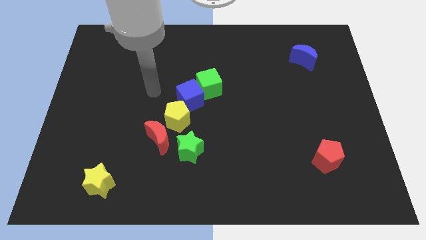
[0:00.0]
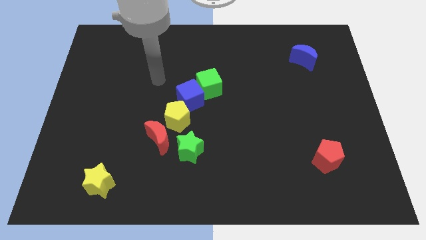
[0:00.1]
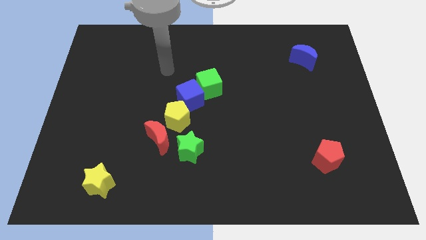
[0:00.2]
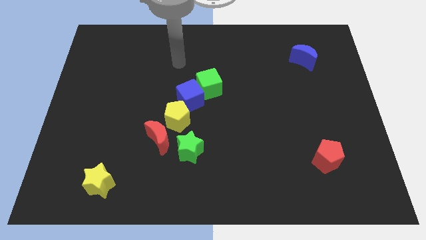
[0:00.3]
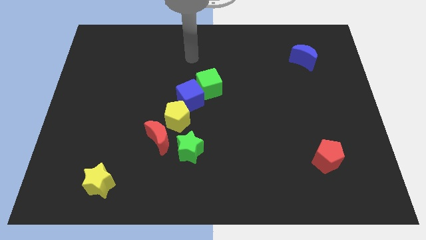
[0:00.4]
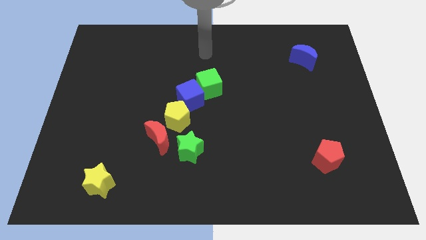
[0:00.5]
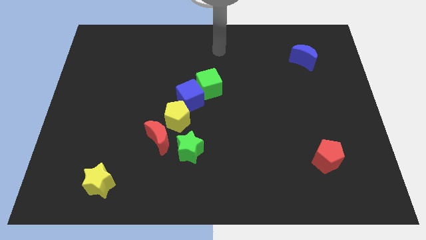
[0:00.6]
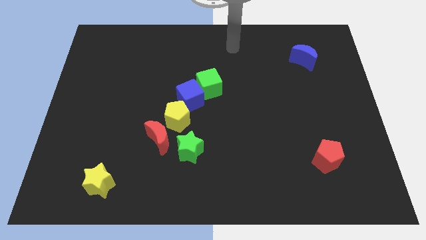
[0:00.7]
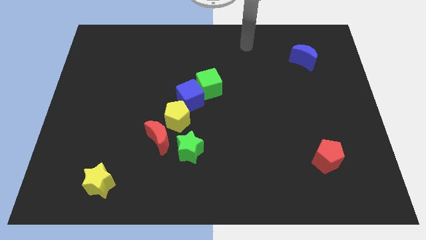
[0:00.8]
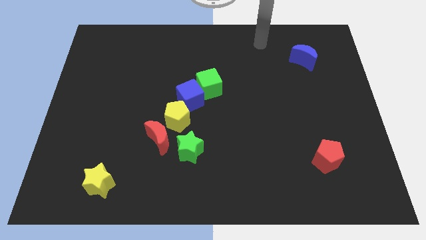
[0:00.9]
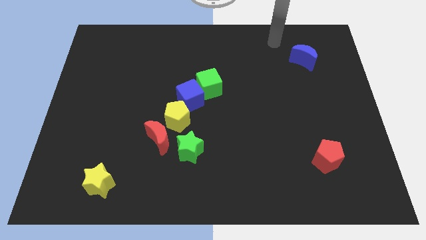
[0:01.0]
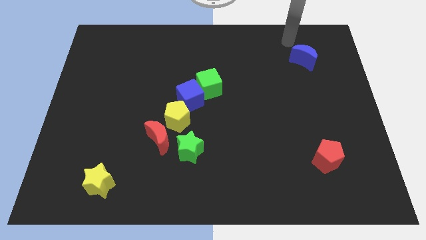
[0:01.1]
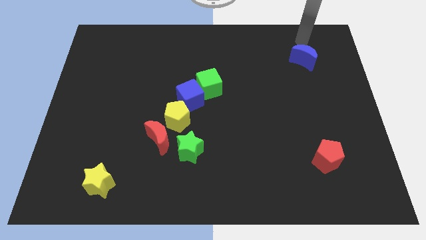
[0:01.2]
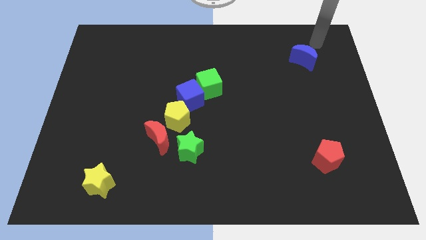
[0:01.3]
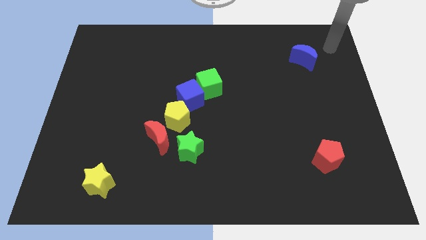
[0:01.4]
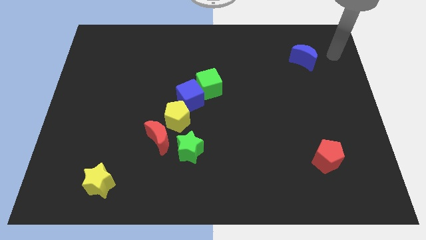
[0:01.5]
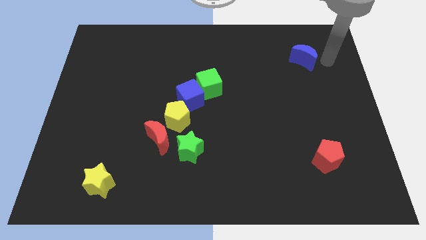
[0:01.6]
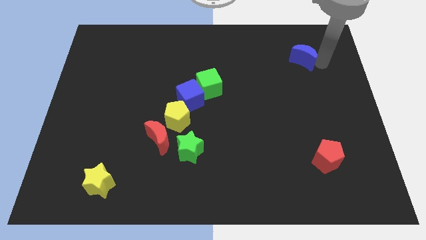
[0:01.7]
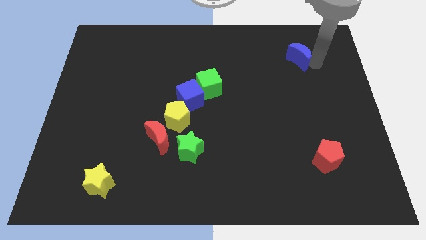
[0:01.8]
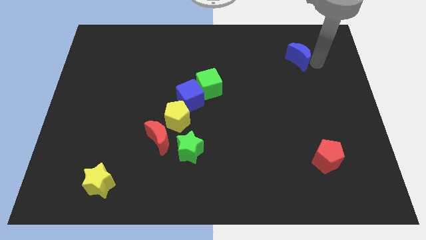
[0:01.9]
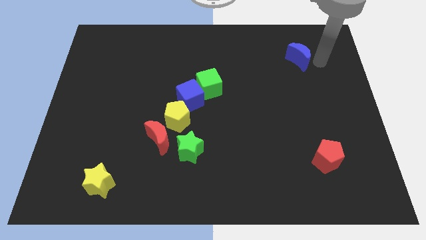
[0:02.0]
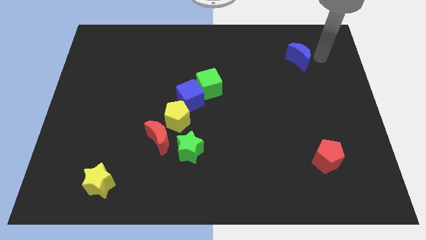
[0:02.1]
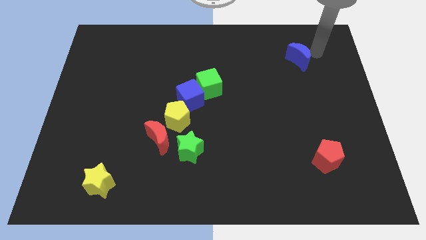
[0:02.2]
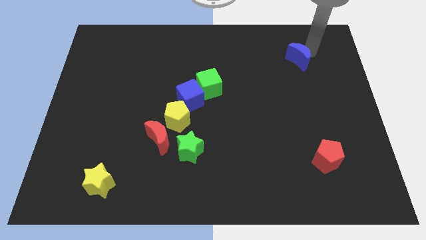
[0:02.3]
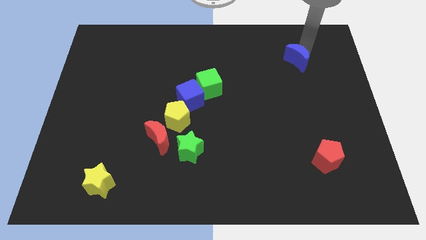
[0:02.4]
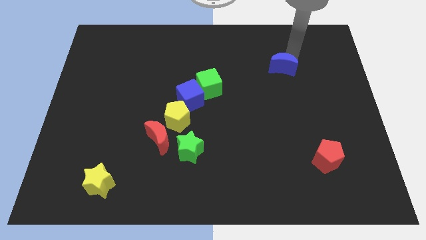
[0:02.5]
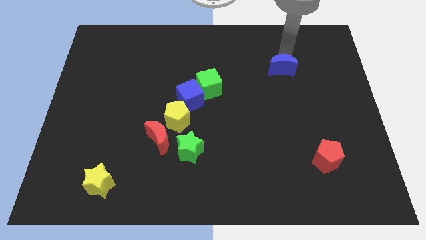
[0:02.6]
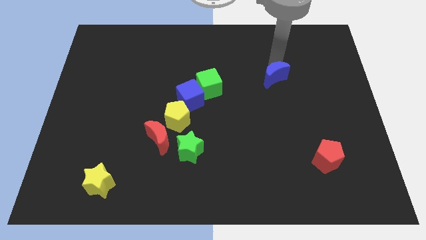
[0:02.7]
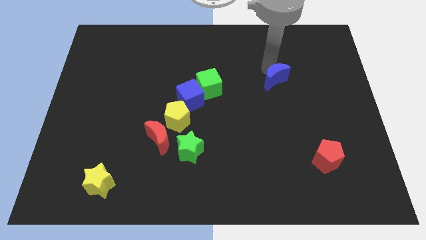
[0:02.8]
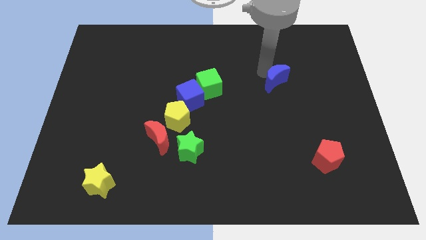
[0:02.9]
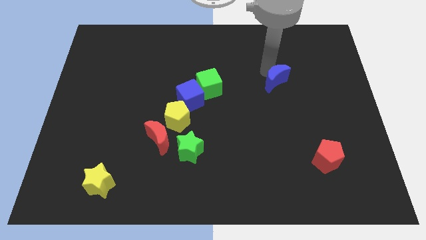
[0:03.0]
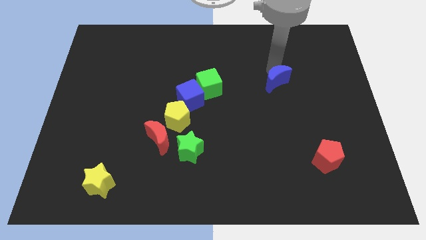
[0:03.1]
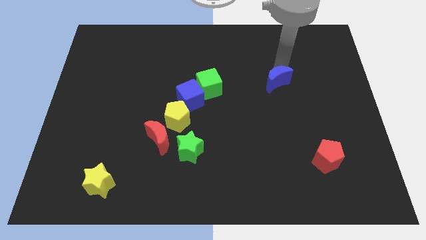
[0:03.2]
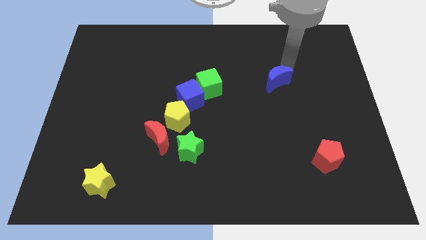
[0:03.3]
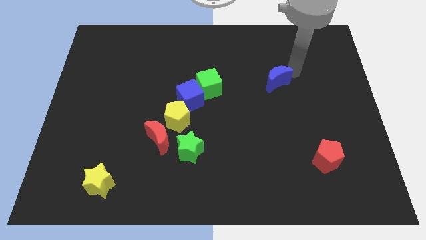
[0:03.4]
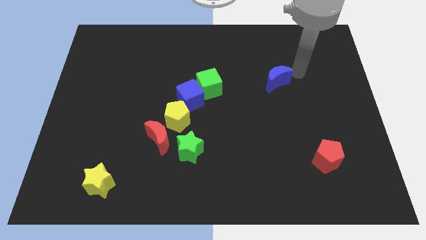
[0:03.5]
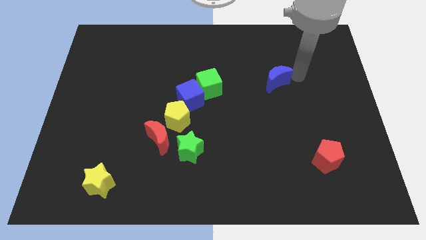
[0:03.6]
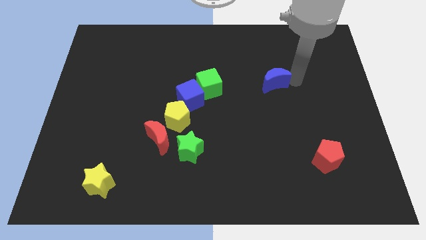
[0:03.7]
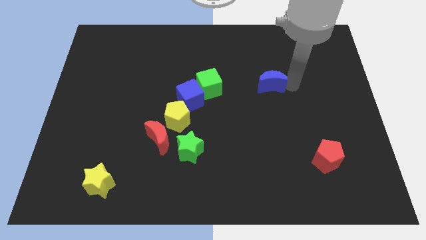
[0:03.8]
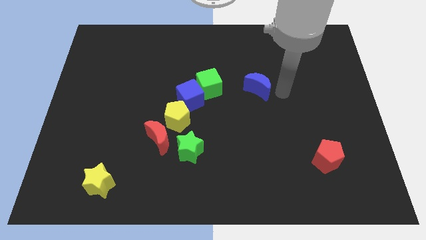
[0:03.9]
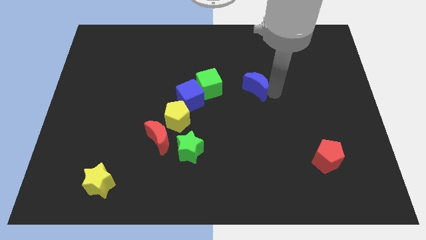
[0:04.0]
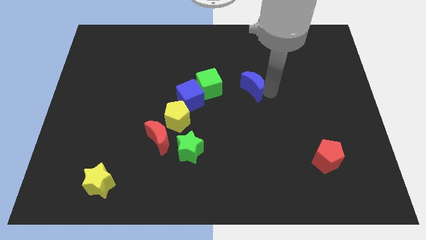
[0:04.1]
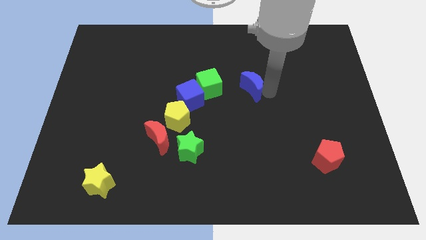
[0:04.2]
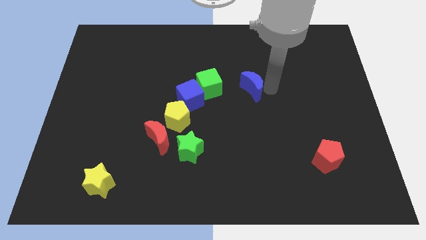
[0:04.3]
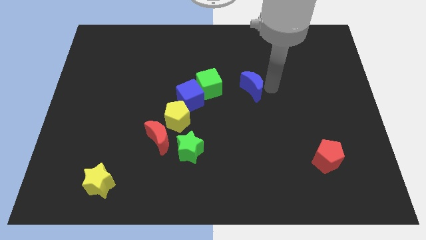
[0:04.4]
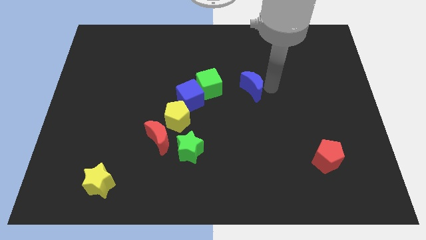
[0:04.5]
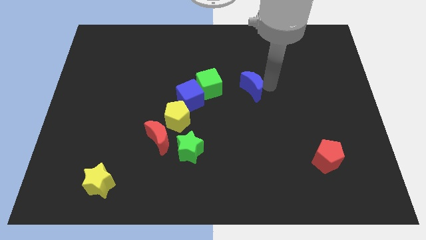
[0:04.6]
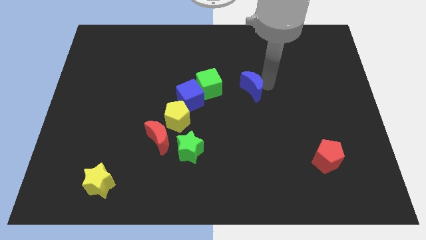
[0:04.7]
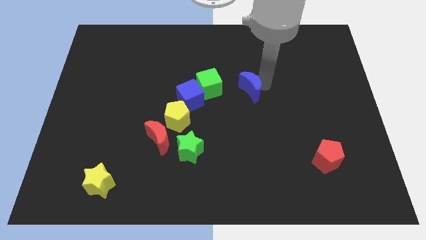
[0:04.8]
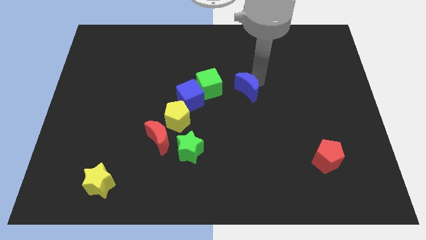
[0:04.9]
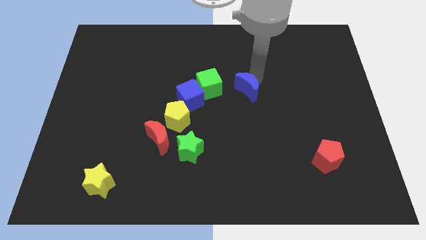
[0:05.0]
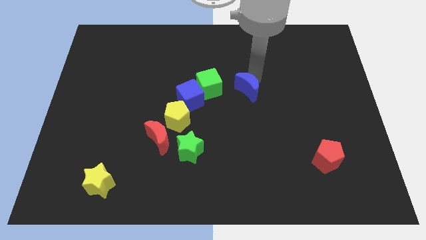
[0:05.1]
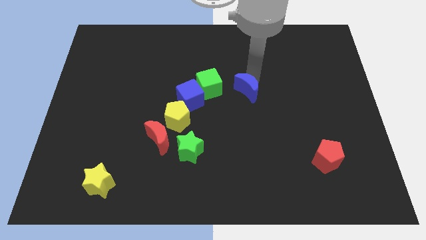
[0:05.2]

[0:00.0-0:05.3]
place the blue moon to the right side of the green cube

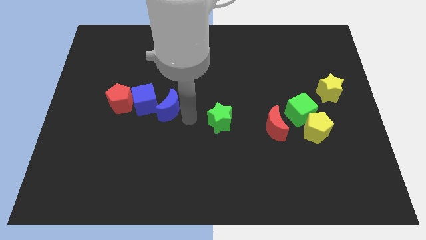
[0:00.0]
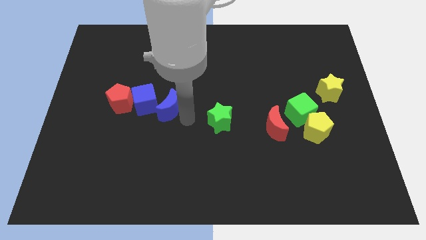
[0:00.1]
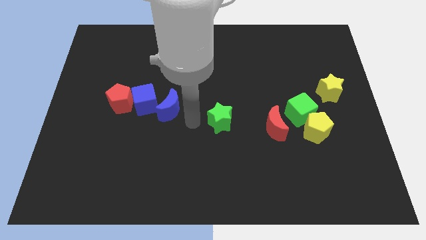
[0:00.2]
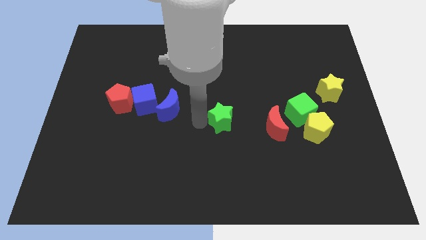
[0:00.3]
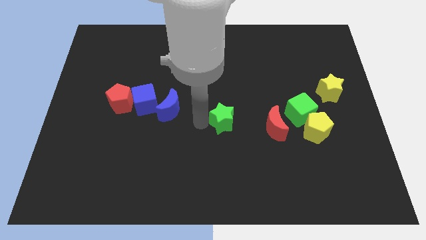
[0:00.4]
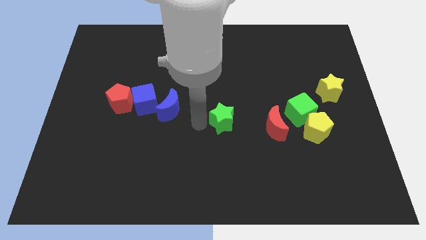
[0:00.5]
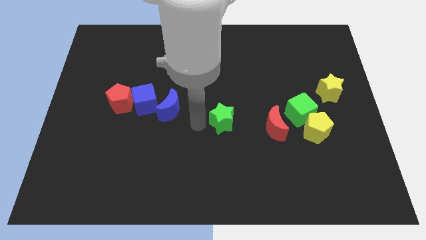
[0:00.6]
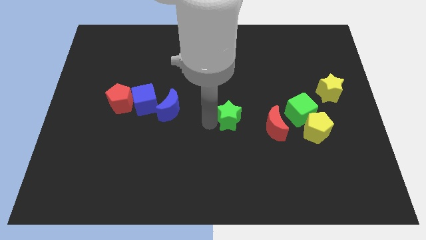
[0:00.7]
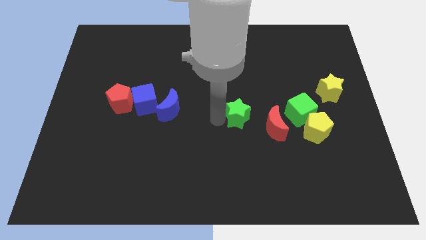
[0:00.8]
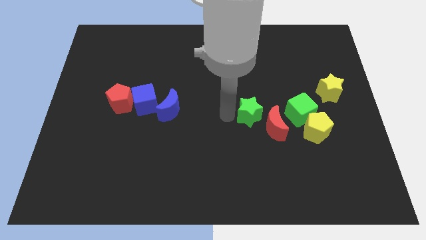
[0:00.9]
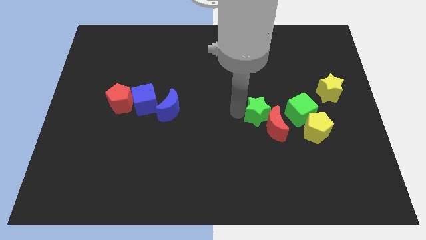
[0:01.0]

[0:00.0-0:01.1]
push green star into red moon

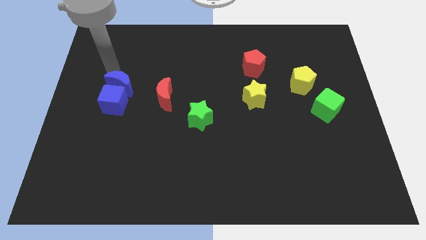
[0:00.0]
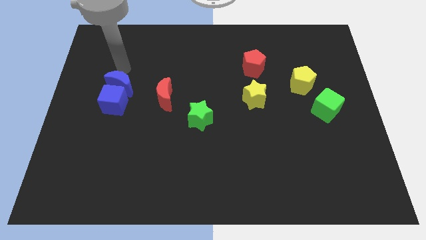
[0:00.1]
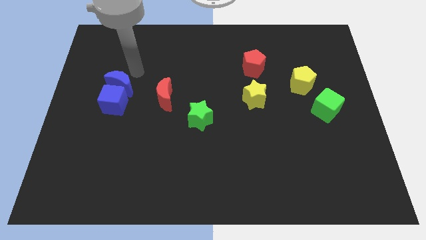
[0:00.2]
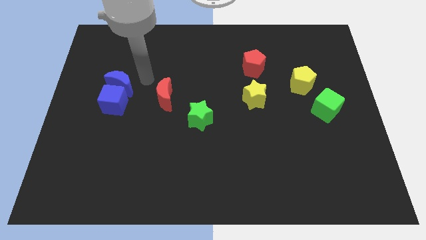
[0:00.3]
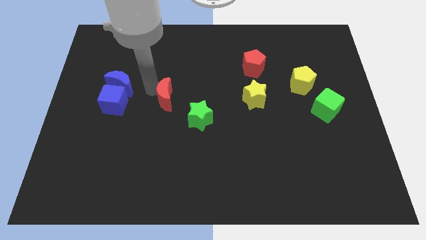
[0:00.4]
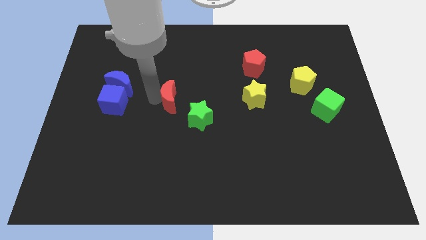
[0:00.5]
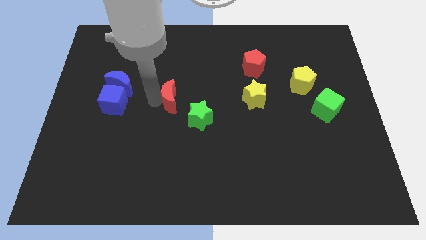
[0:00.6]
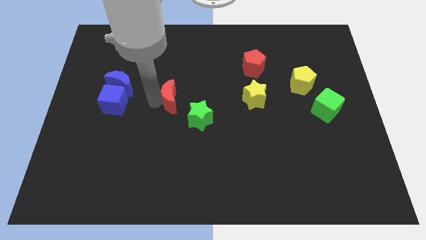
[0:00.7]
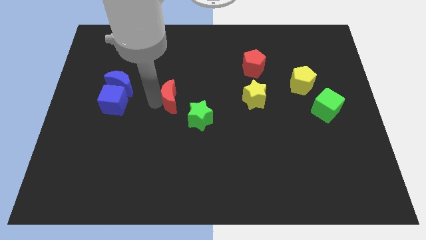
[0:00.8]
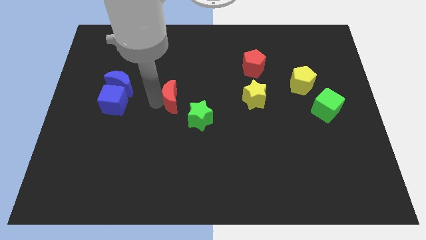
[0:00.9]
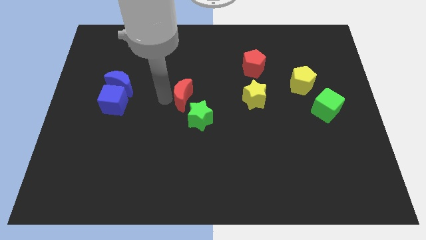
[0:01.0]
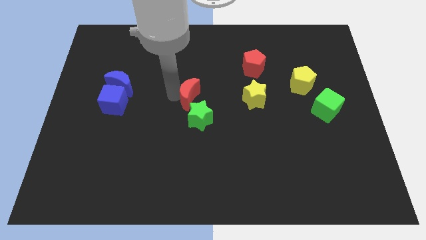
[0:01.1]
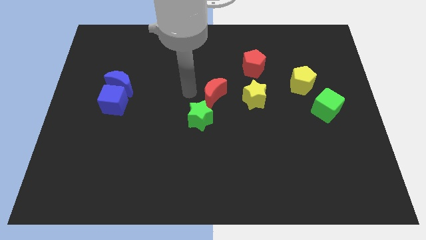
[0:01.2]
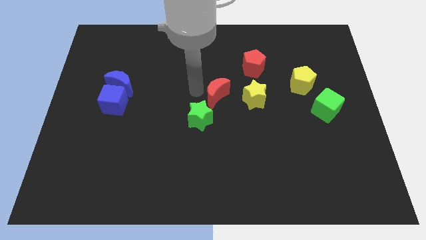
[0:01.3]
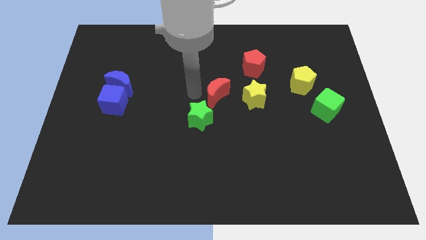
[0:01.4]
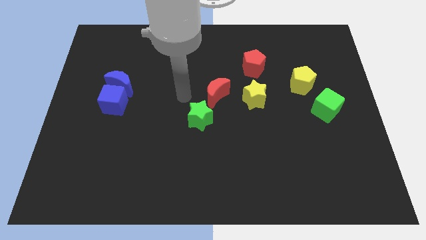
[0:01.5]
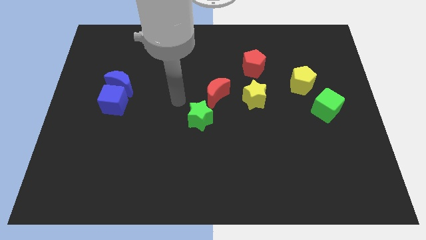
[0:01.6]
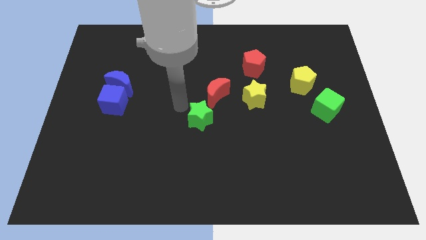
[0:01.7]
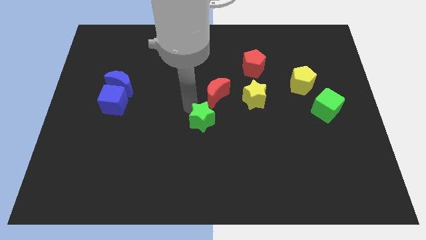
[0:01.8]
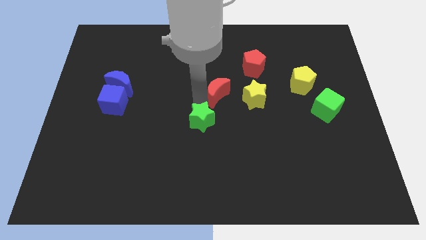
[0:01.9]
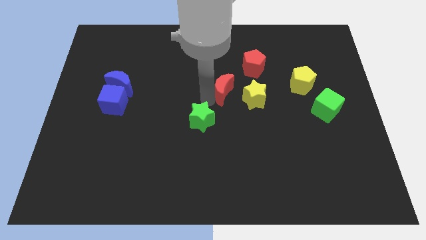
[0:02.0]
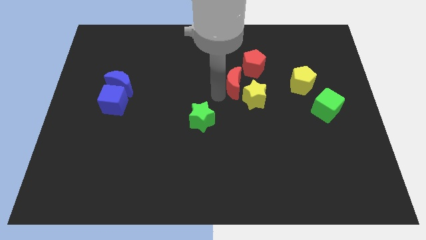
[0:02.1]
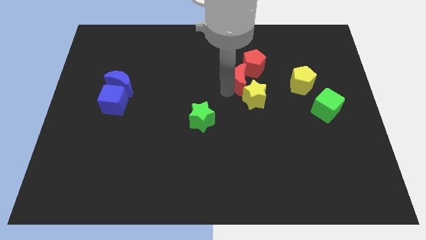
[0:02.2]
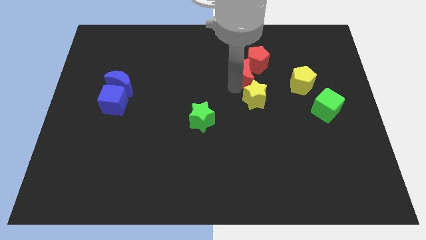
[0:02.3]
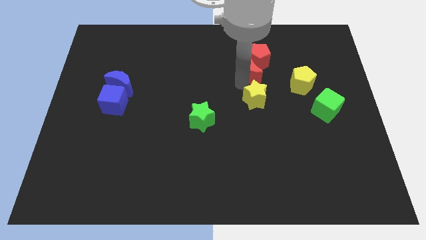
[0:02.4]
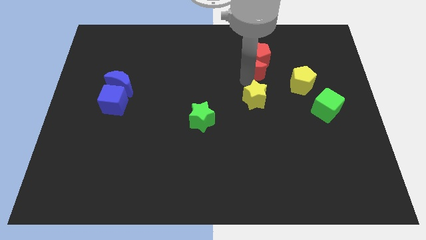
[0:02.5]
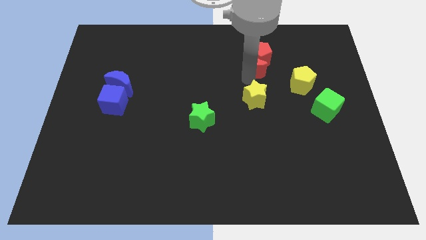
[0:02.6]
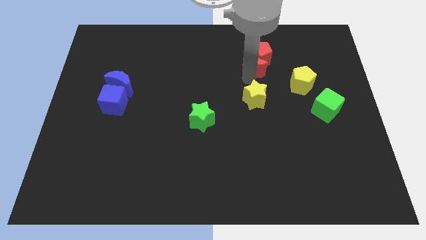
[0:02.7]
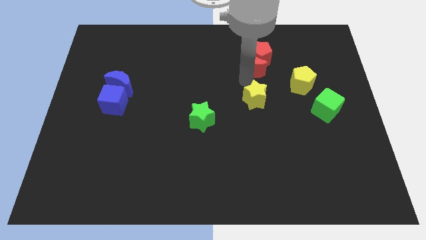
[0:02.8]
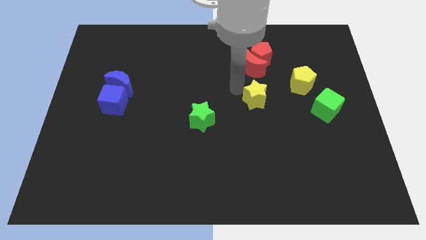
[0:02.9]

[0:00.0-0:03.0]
push the red crescent into the red pentagon
